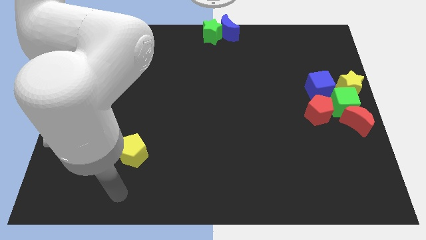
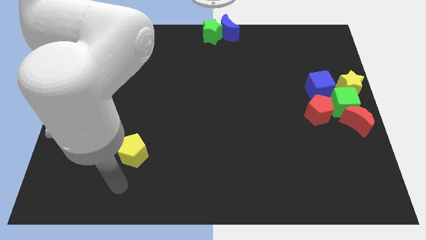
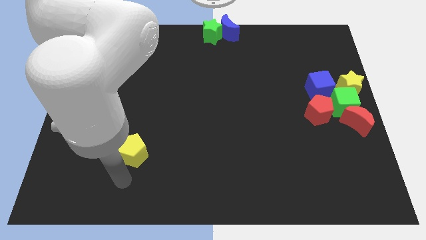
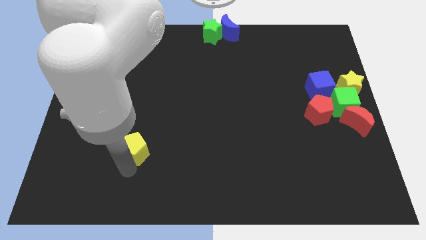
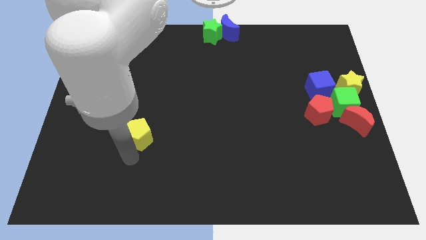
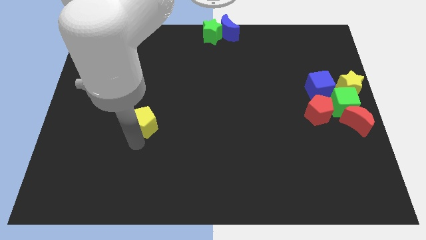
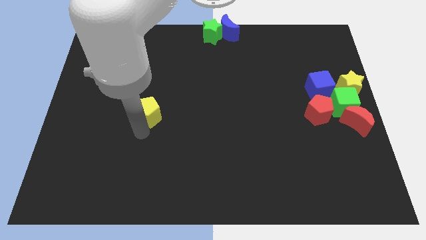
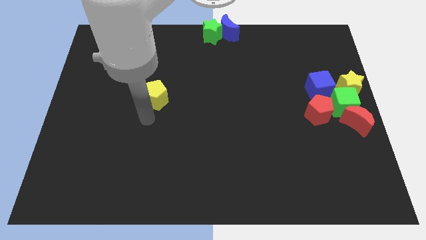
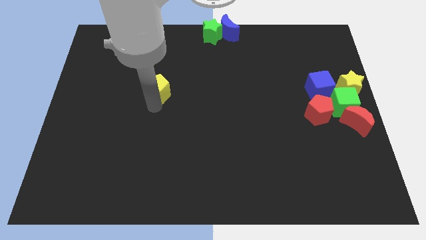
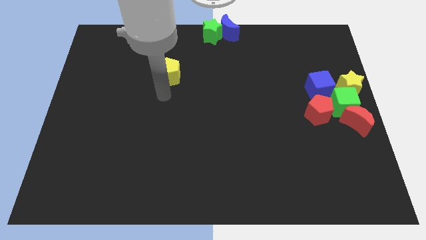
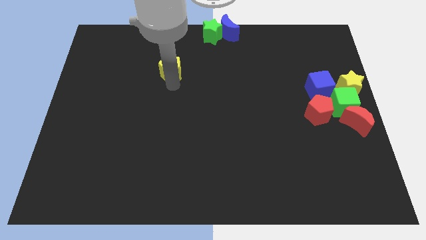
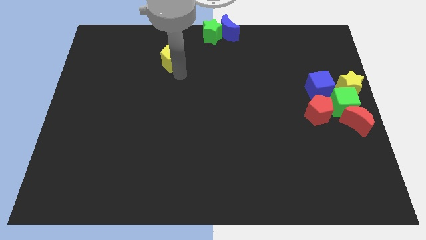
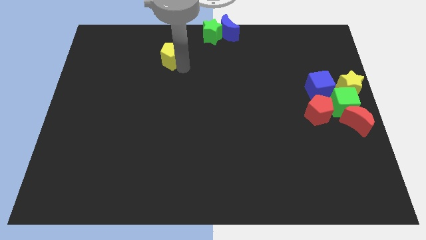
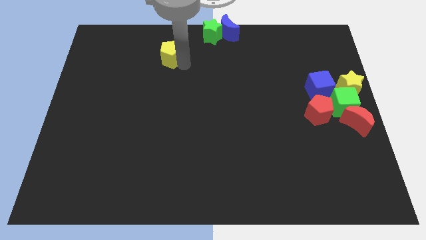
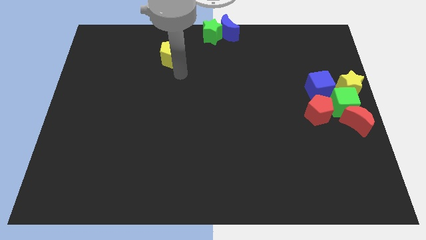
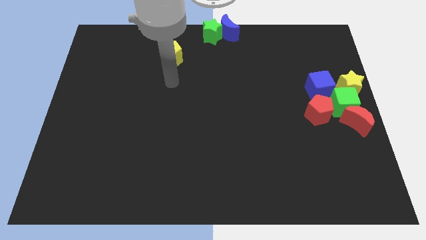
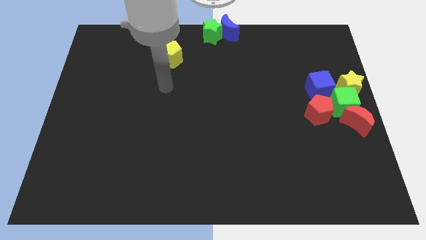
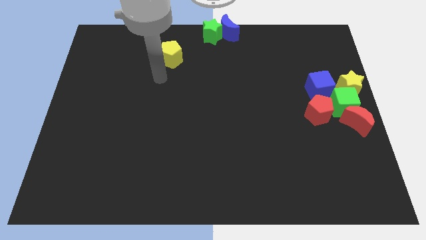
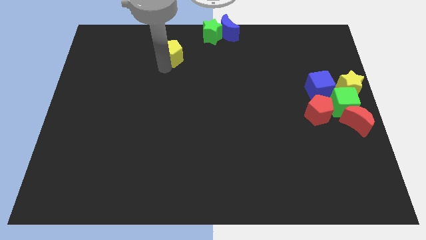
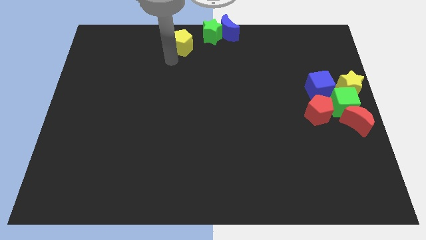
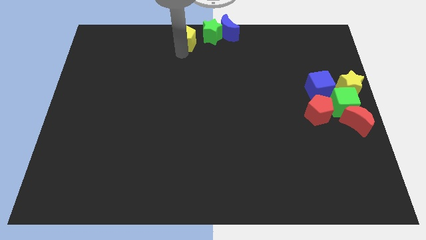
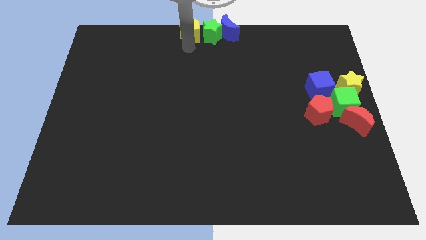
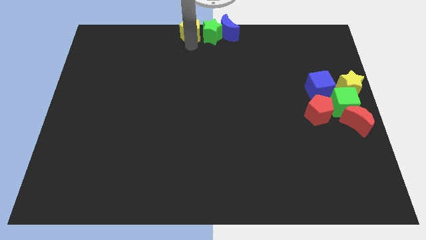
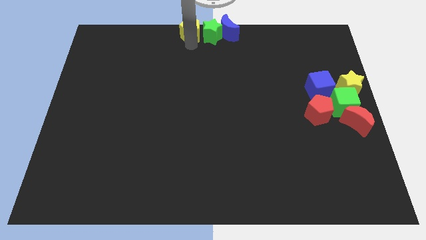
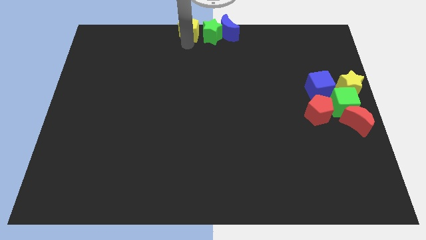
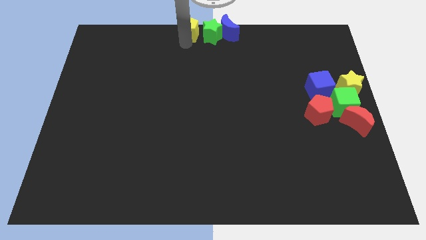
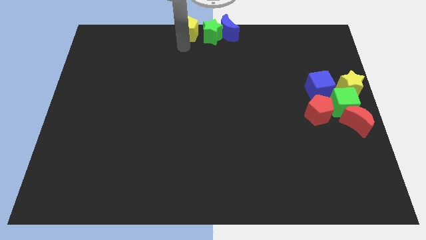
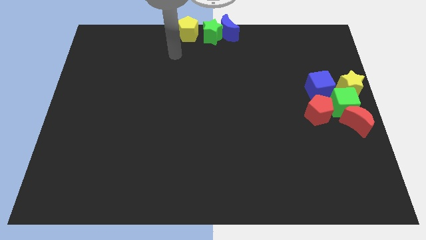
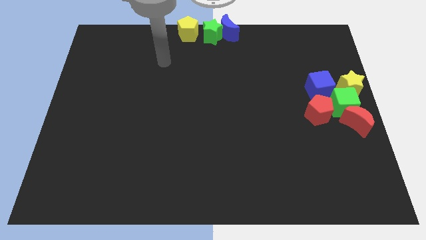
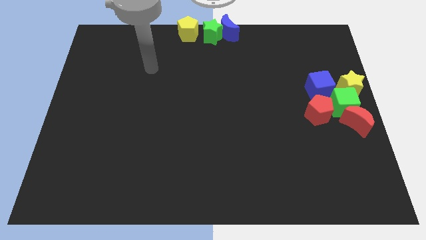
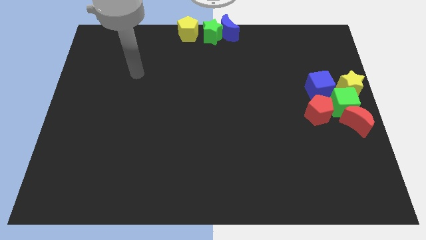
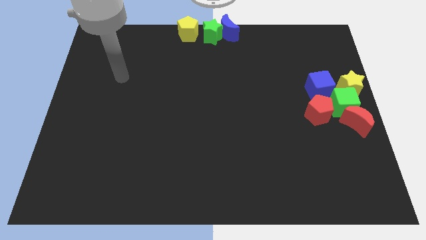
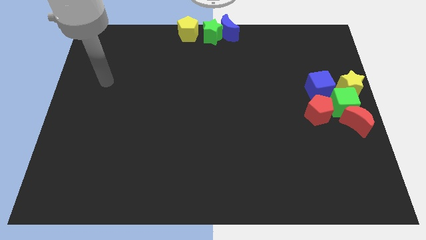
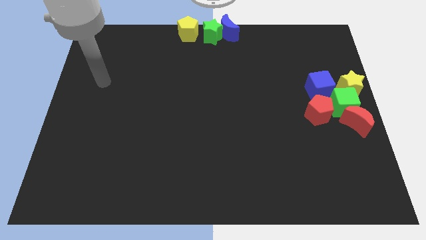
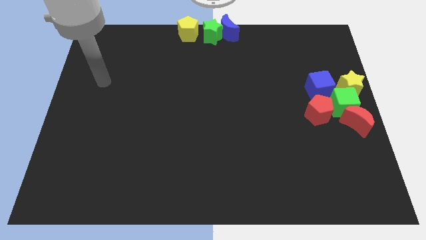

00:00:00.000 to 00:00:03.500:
push the yellow pentagon to the left of the green star

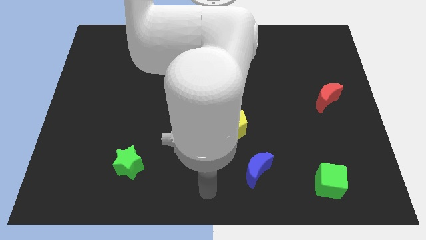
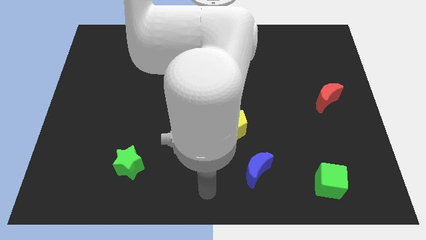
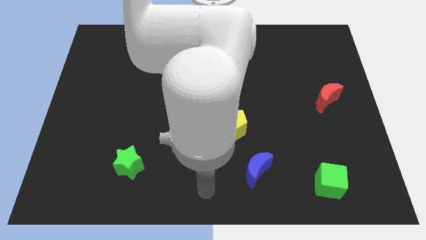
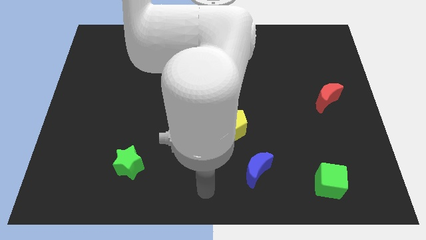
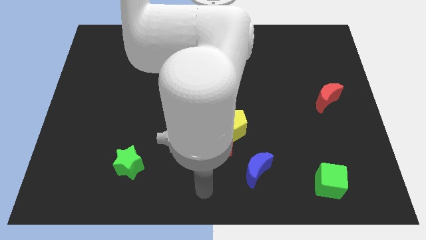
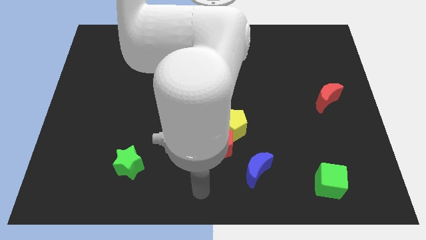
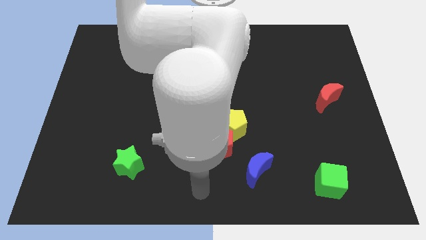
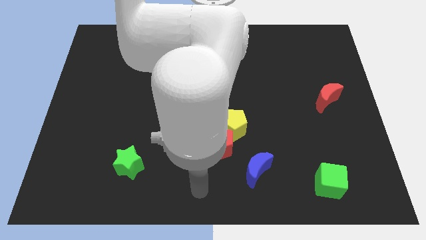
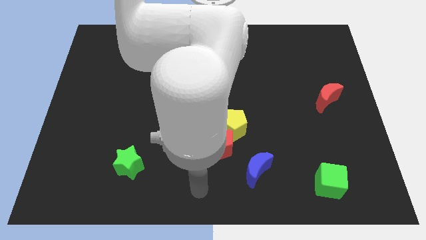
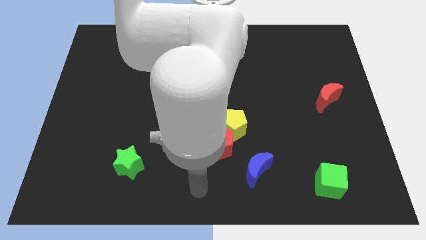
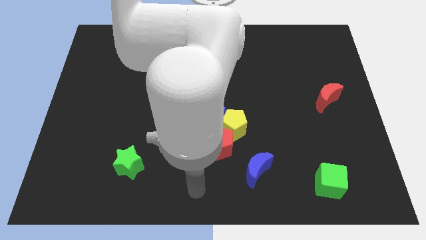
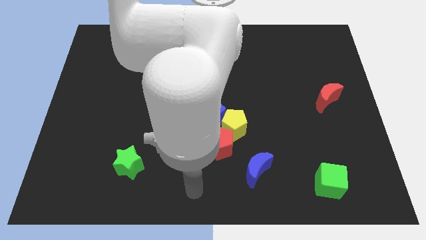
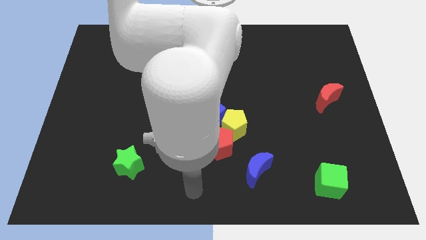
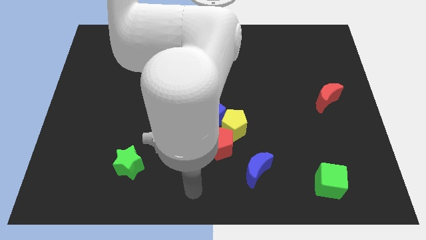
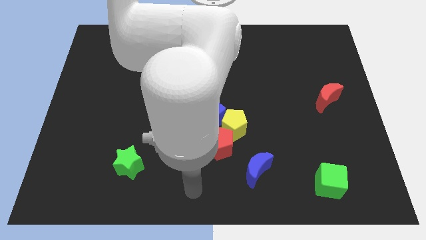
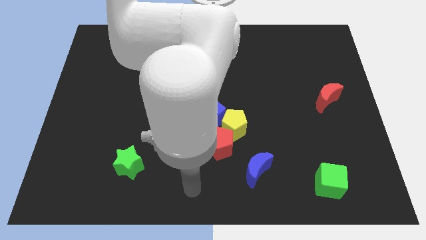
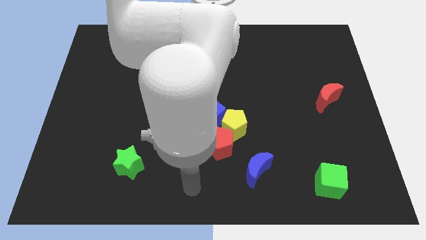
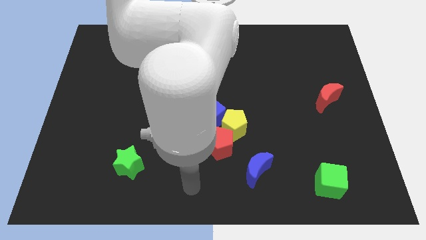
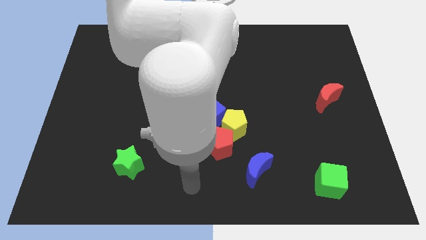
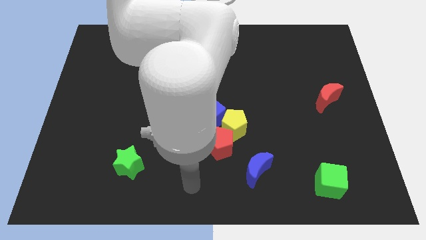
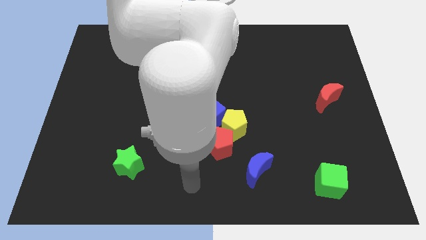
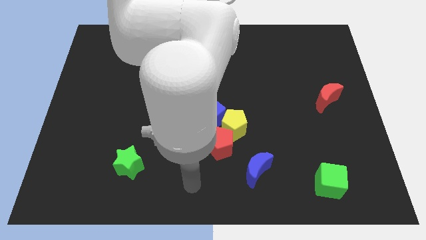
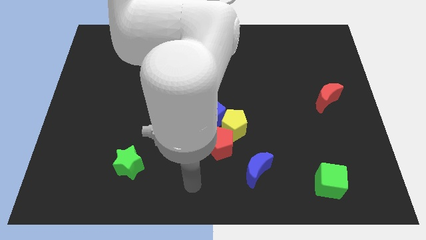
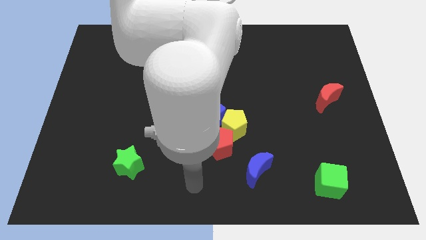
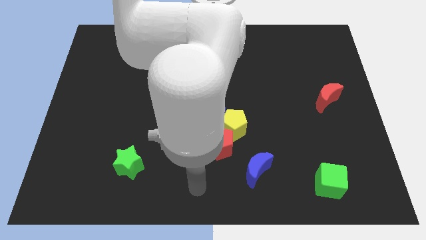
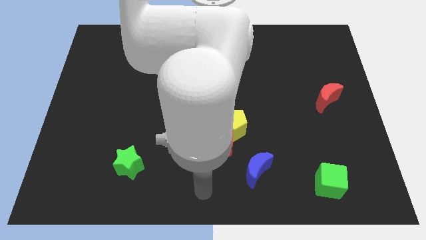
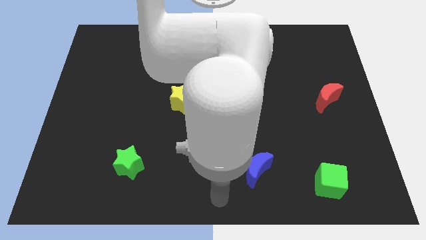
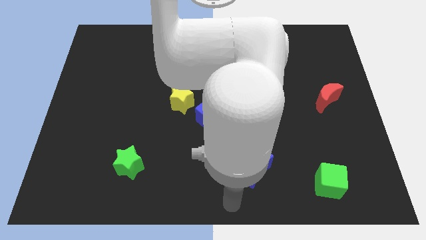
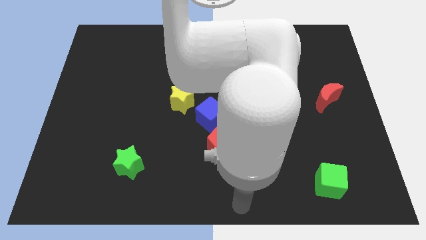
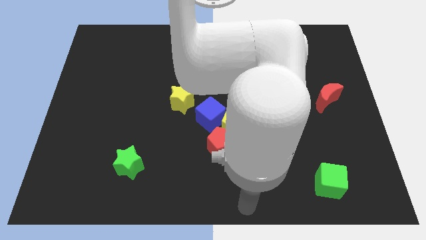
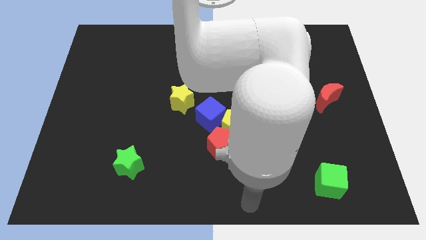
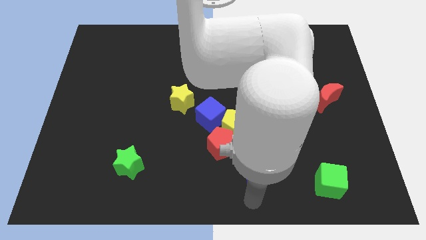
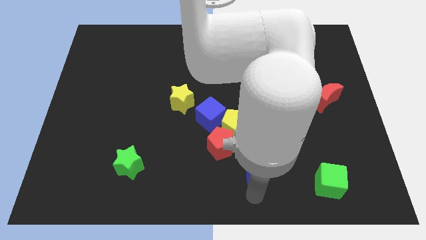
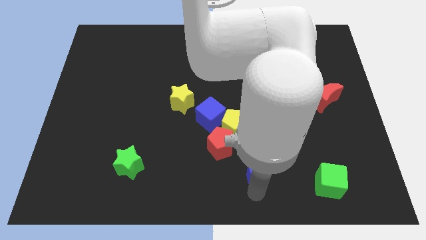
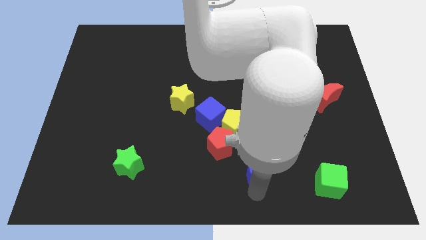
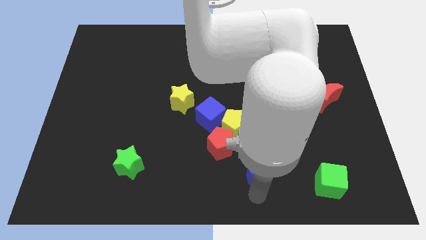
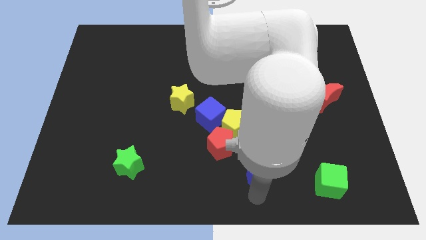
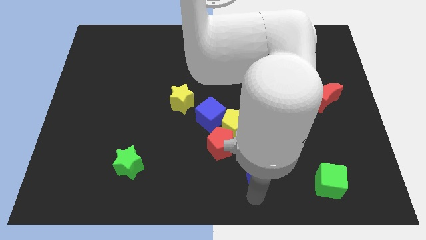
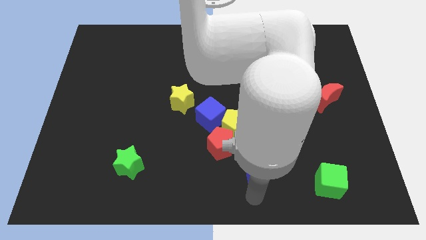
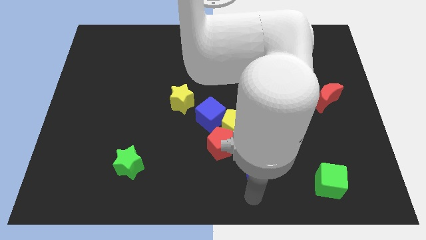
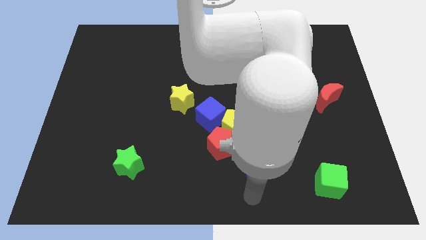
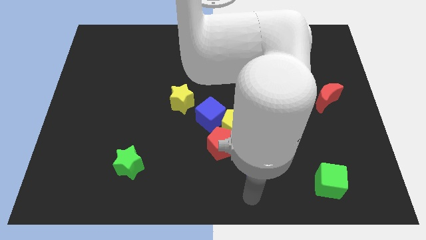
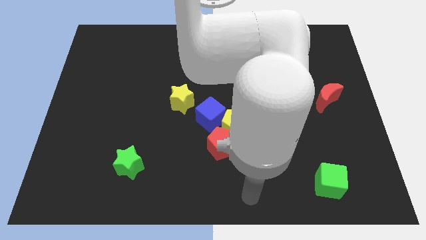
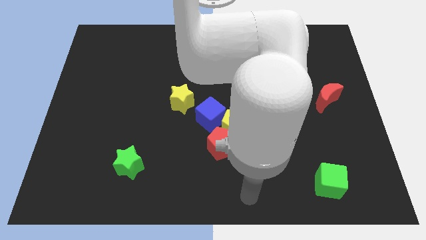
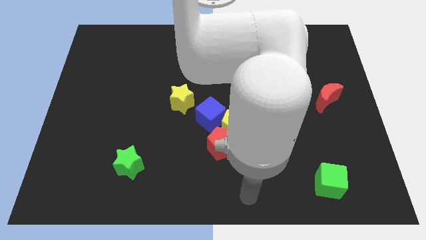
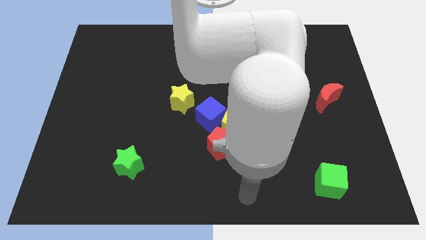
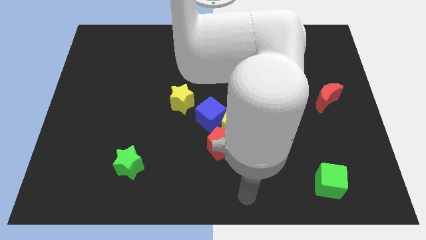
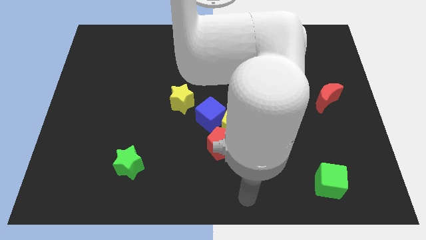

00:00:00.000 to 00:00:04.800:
place your arm at the bottom

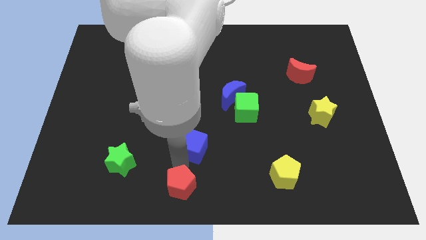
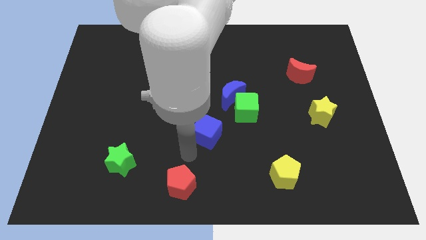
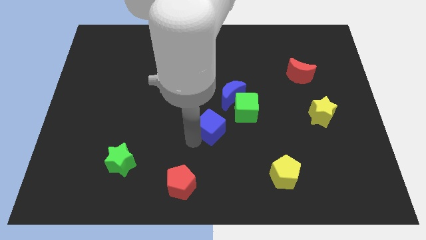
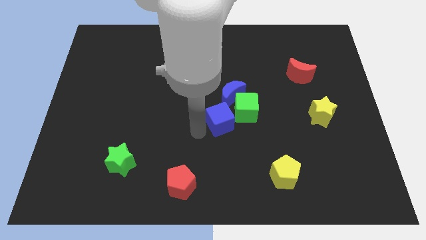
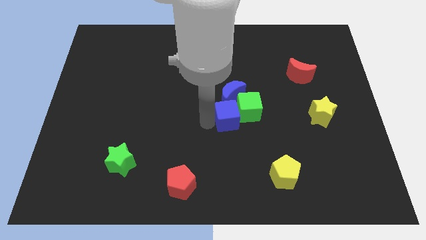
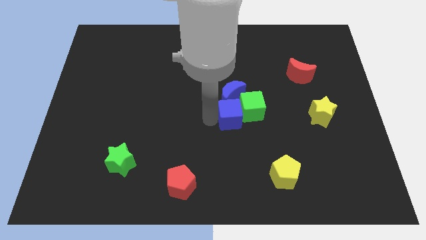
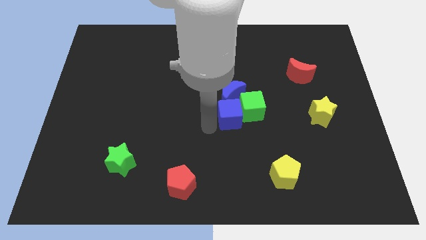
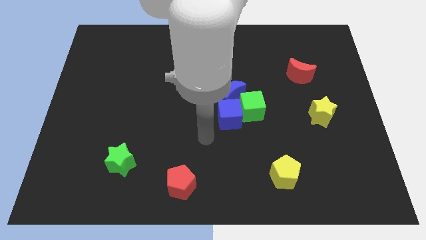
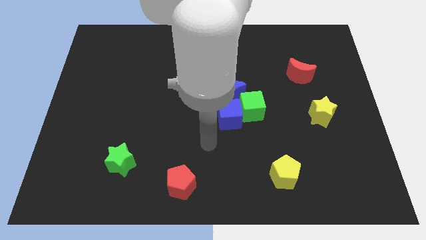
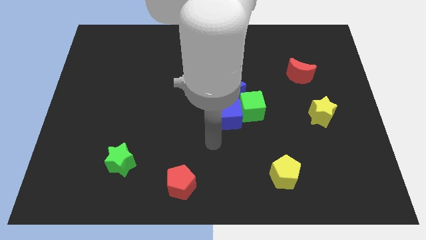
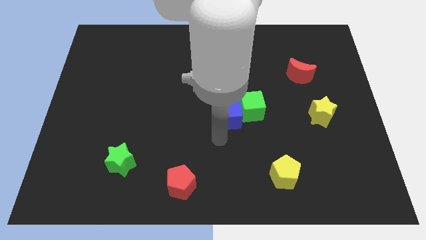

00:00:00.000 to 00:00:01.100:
push the blue cube into the green cube
